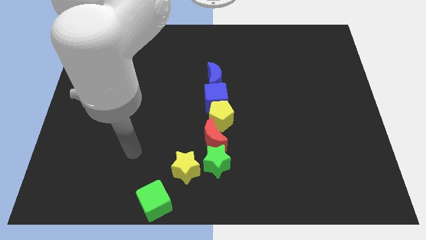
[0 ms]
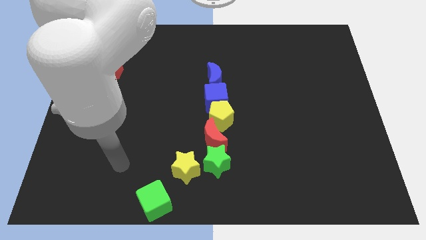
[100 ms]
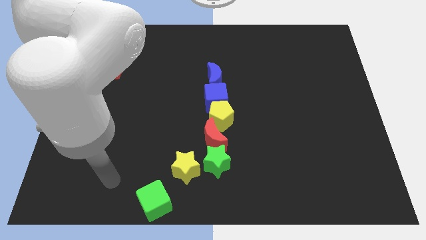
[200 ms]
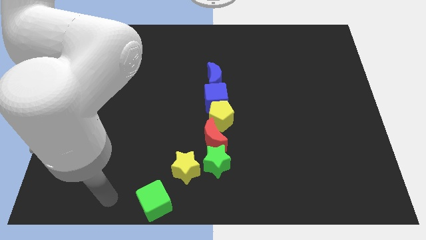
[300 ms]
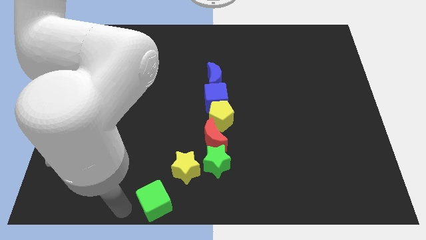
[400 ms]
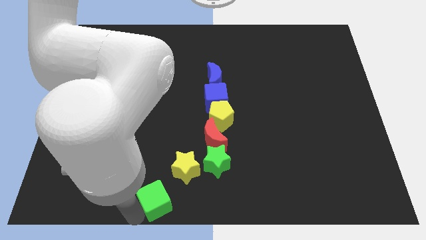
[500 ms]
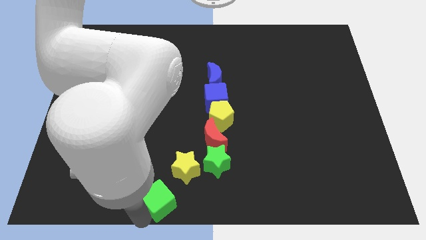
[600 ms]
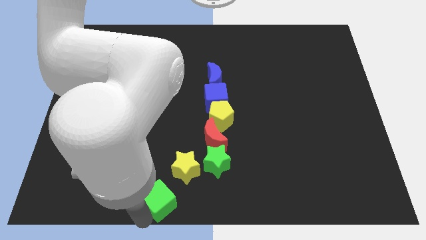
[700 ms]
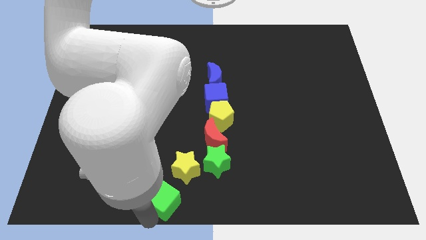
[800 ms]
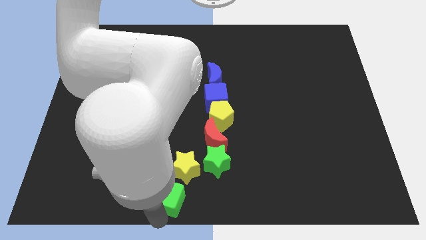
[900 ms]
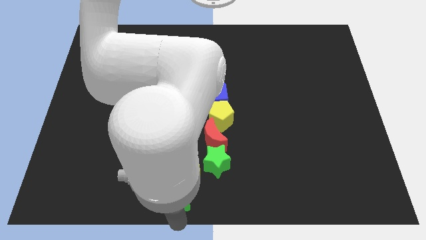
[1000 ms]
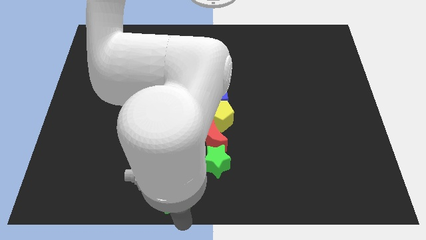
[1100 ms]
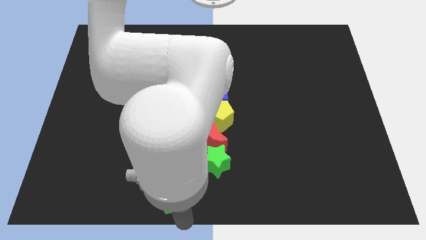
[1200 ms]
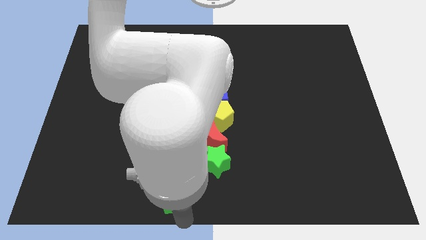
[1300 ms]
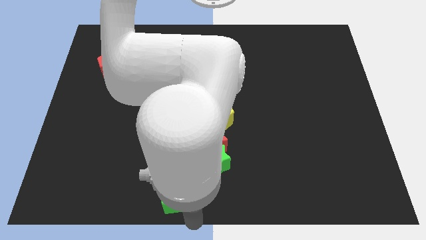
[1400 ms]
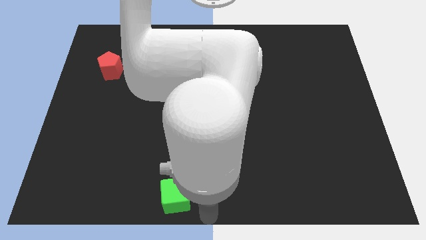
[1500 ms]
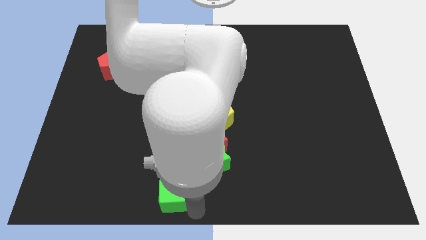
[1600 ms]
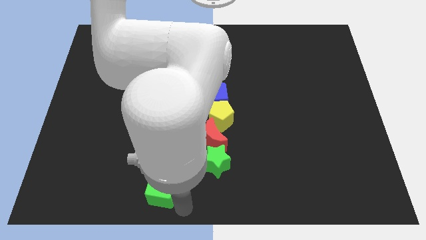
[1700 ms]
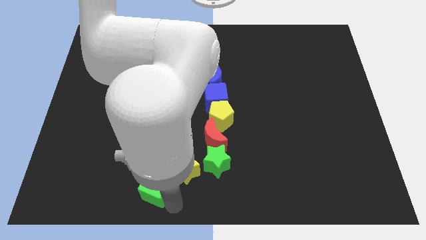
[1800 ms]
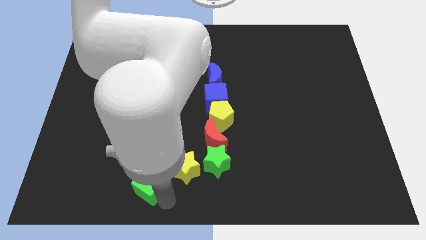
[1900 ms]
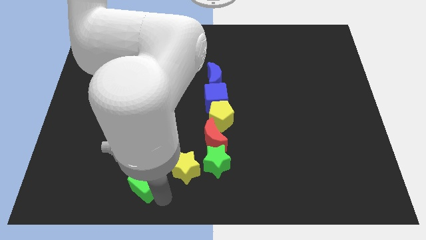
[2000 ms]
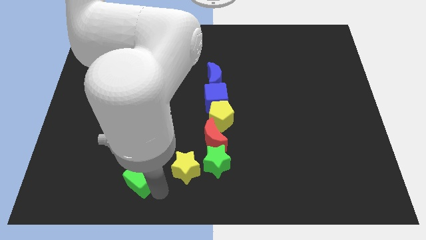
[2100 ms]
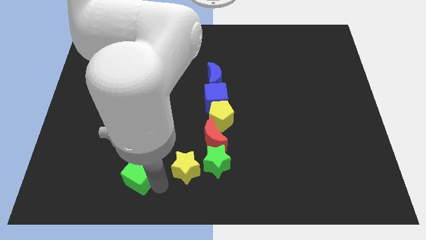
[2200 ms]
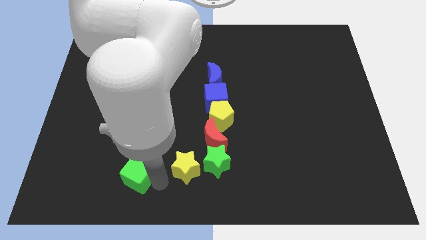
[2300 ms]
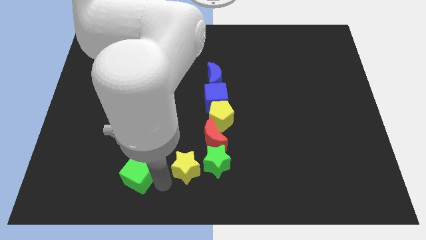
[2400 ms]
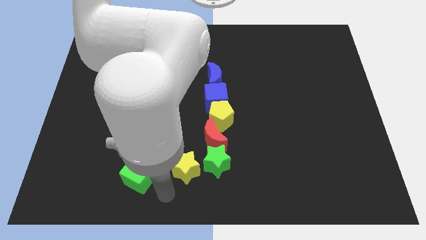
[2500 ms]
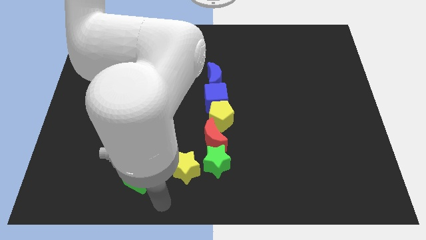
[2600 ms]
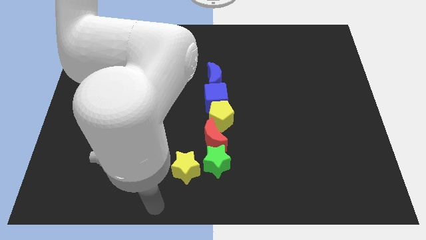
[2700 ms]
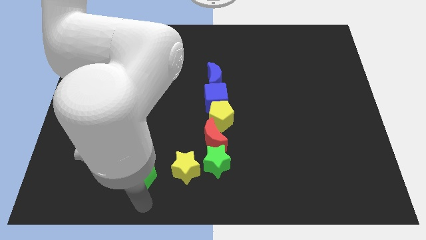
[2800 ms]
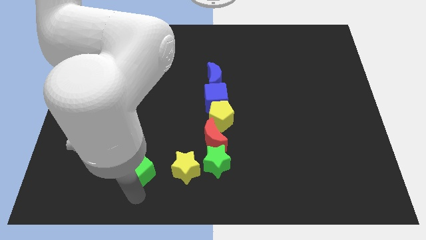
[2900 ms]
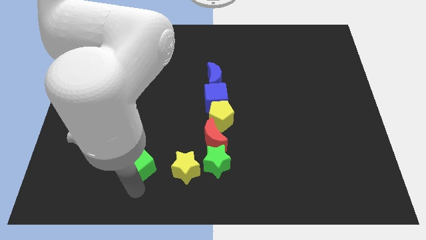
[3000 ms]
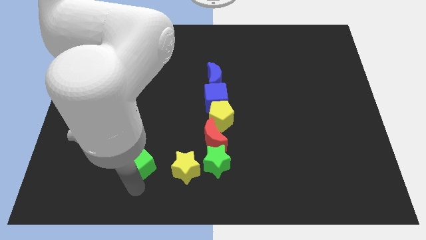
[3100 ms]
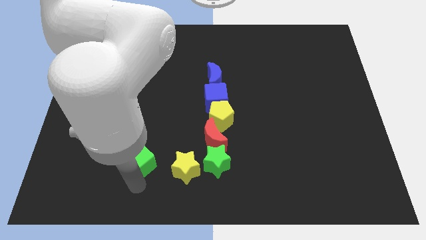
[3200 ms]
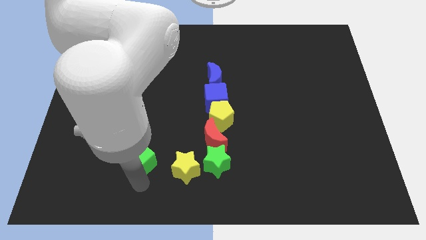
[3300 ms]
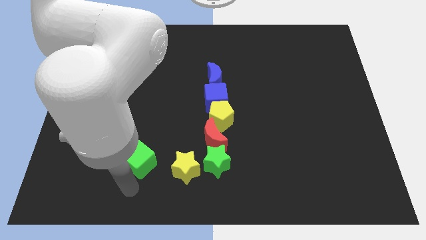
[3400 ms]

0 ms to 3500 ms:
move the green cube to the left of the yellow star

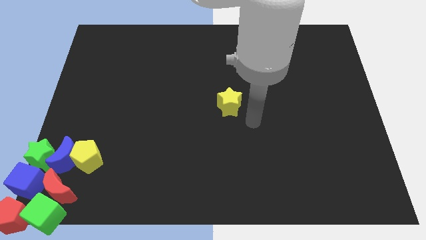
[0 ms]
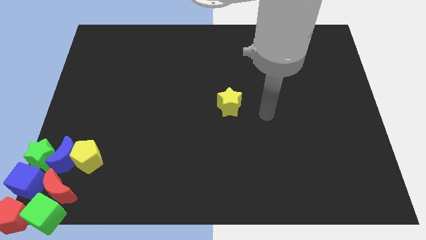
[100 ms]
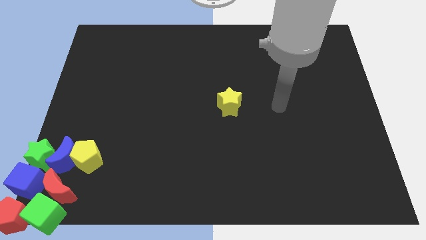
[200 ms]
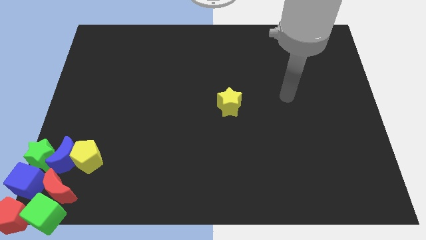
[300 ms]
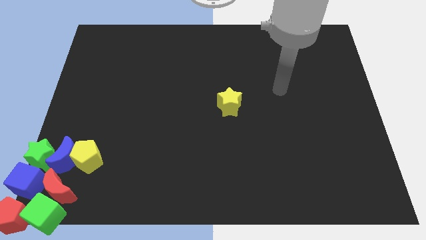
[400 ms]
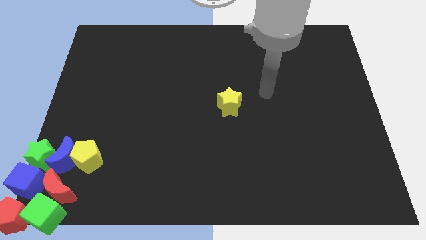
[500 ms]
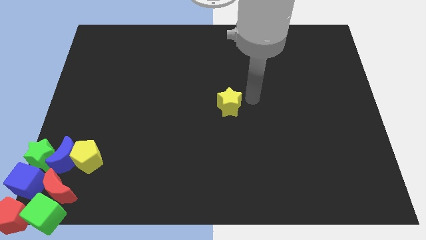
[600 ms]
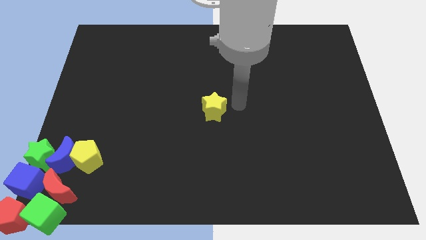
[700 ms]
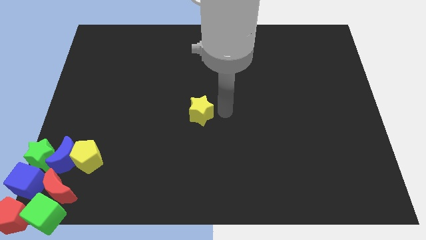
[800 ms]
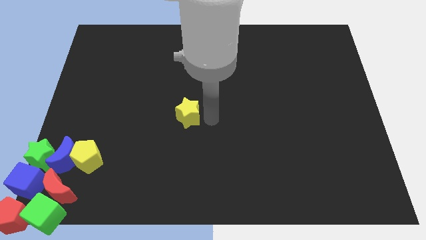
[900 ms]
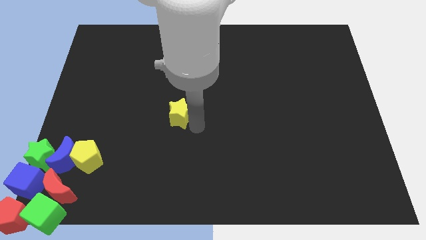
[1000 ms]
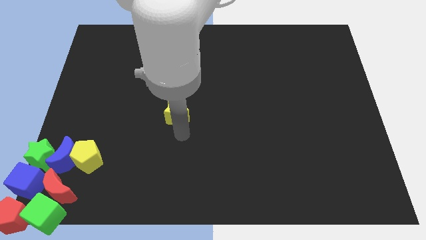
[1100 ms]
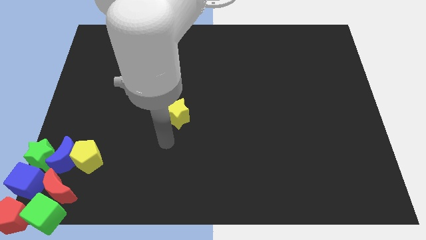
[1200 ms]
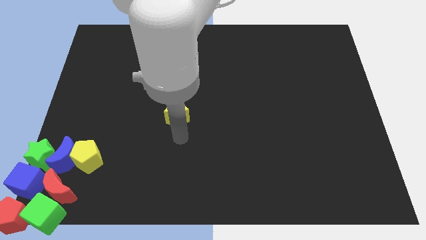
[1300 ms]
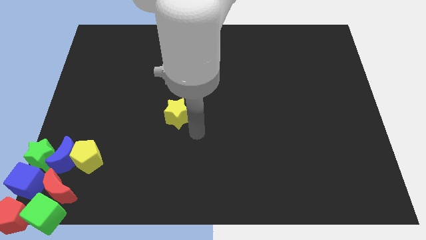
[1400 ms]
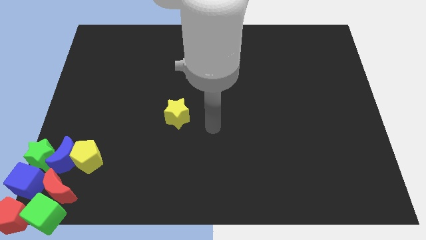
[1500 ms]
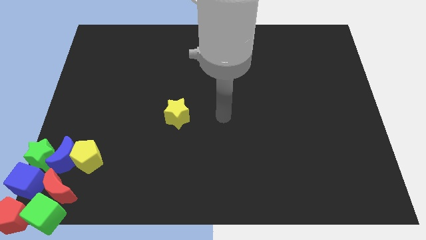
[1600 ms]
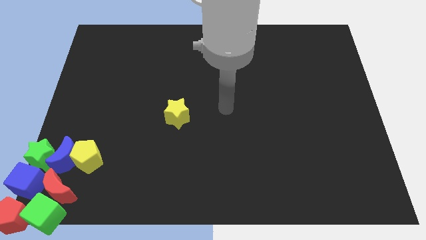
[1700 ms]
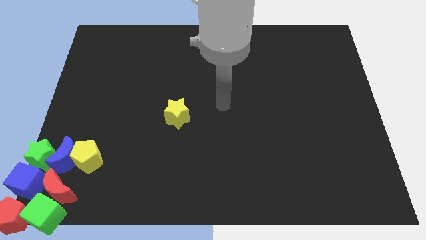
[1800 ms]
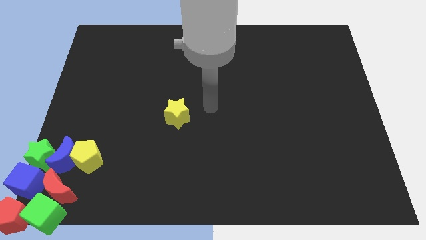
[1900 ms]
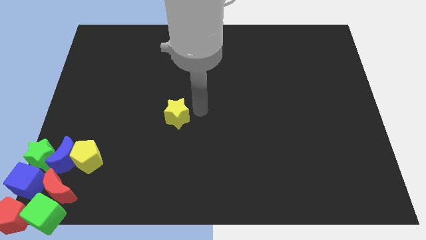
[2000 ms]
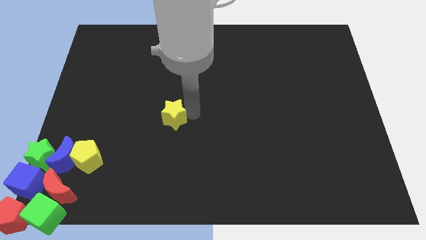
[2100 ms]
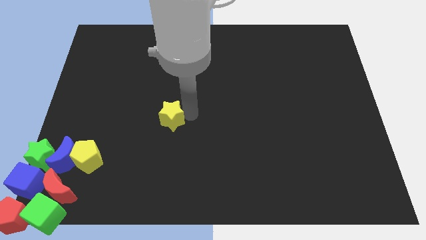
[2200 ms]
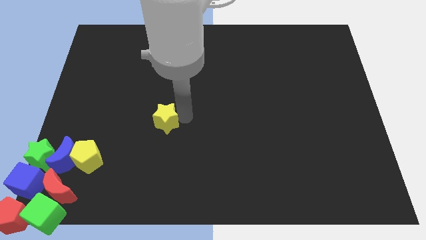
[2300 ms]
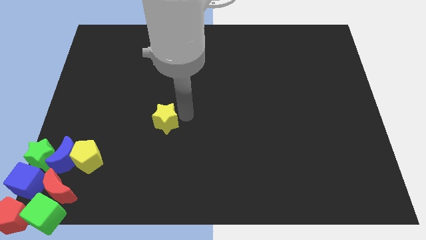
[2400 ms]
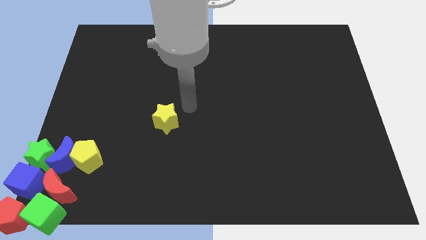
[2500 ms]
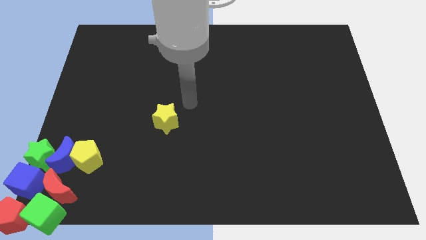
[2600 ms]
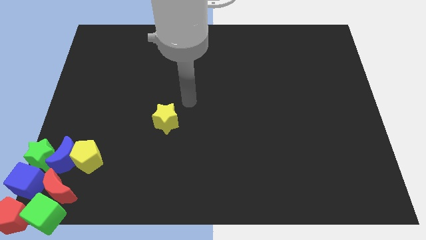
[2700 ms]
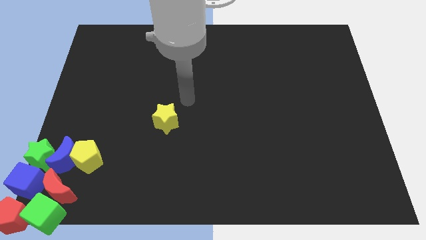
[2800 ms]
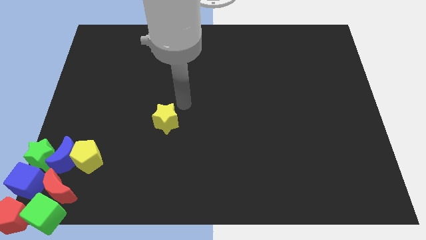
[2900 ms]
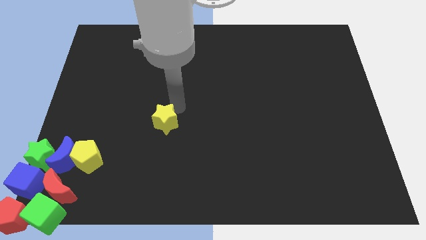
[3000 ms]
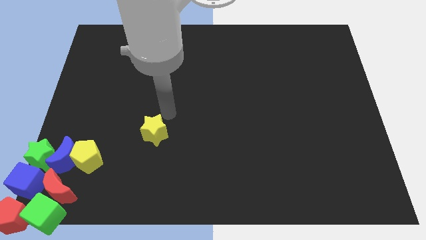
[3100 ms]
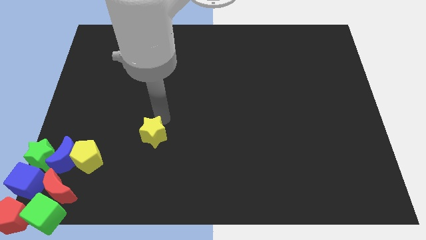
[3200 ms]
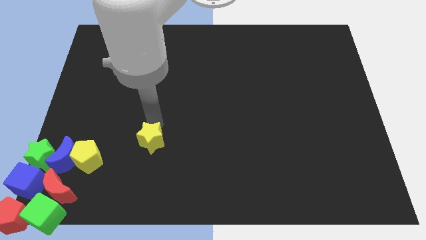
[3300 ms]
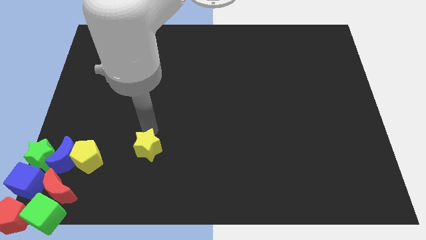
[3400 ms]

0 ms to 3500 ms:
move the yellow star towards the yellow pentagon

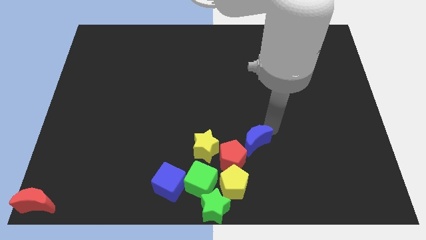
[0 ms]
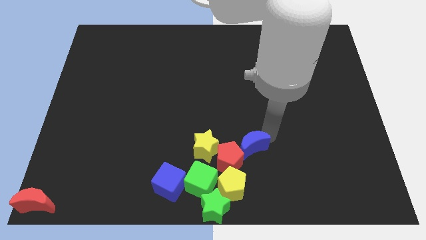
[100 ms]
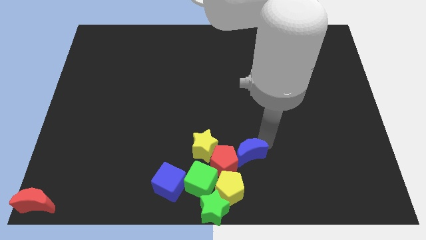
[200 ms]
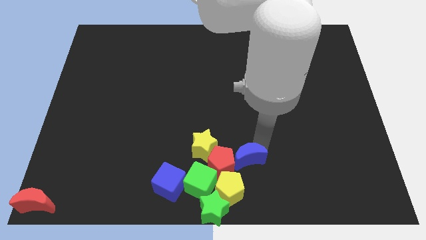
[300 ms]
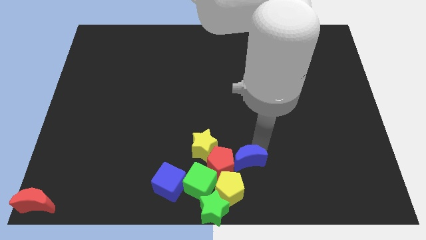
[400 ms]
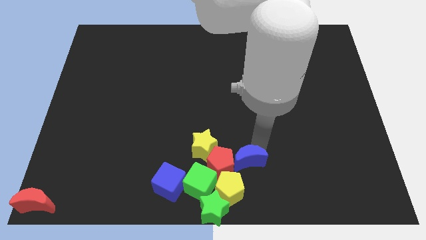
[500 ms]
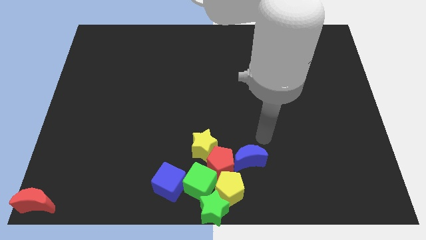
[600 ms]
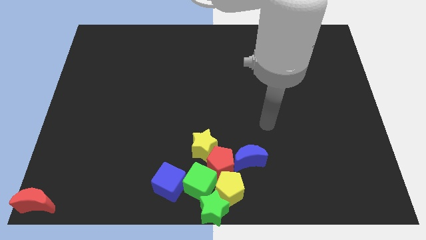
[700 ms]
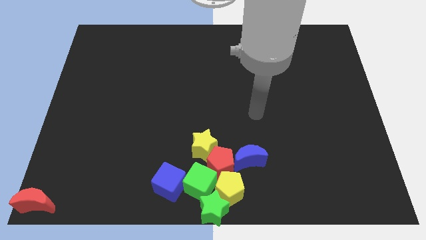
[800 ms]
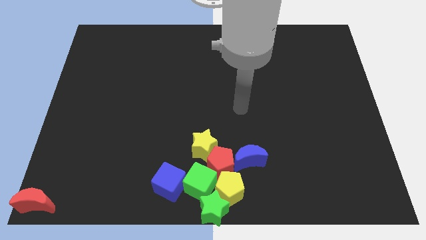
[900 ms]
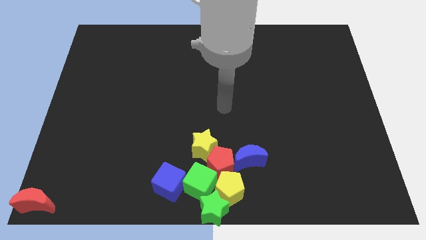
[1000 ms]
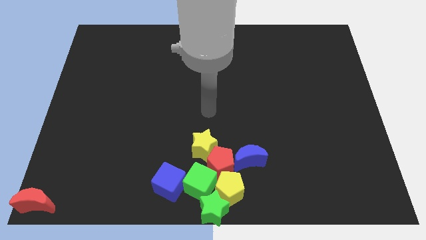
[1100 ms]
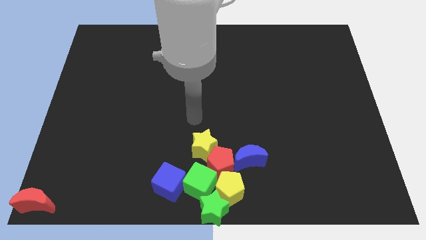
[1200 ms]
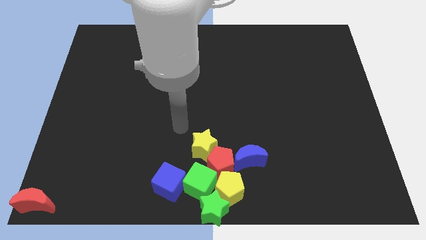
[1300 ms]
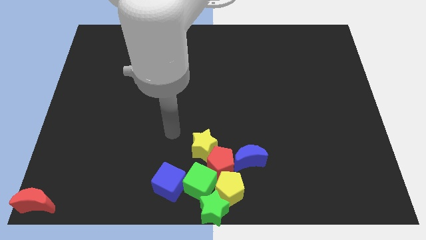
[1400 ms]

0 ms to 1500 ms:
move the blue moon right beside the red pentagon

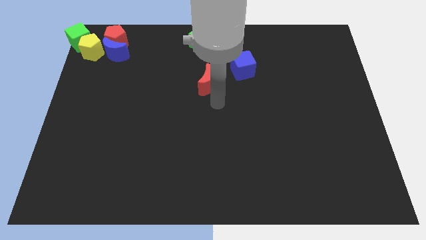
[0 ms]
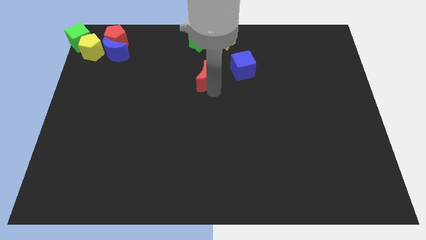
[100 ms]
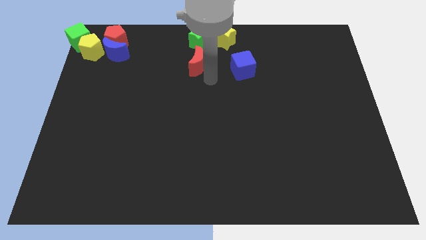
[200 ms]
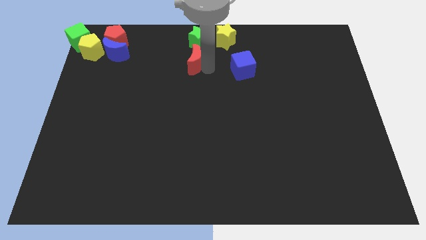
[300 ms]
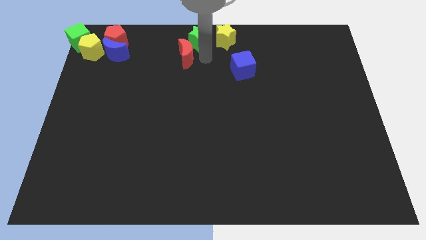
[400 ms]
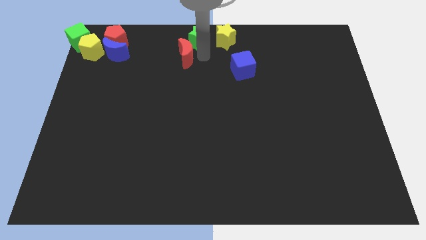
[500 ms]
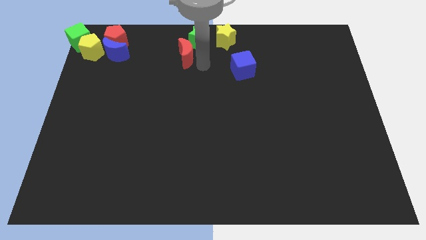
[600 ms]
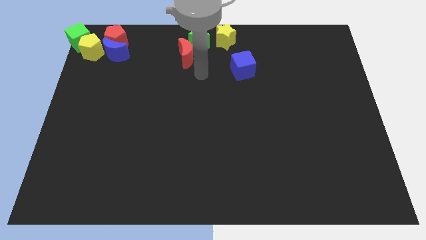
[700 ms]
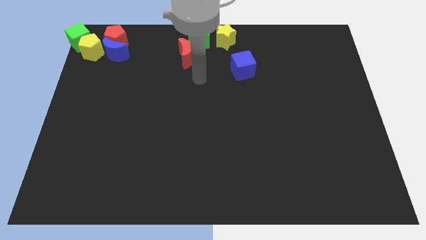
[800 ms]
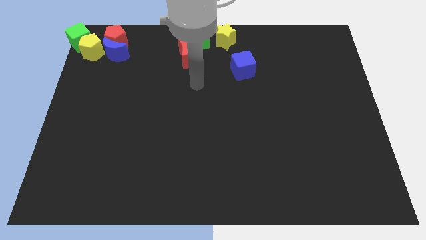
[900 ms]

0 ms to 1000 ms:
place the red crescent to the left bottom of the green star
